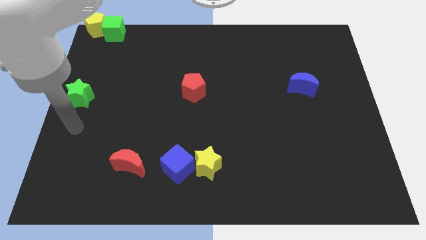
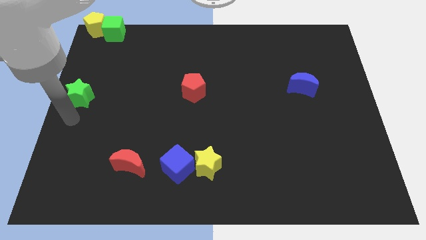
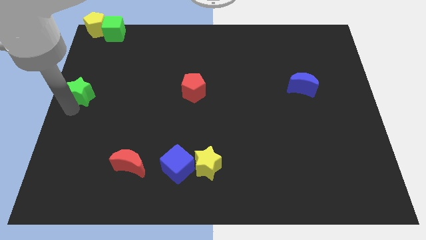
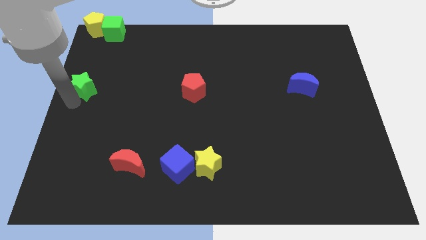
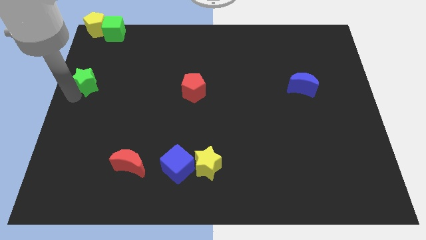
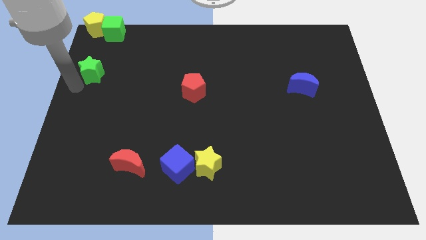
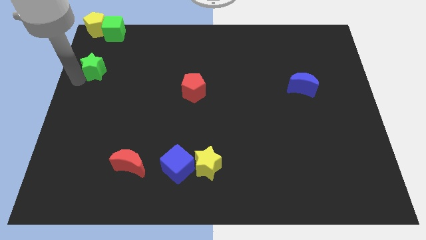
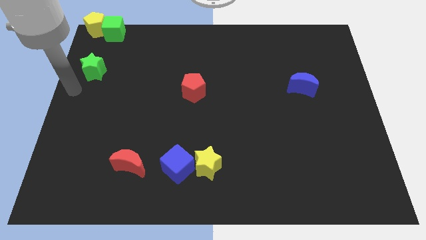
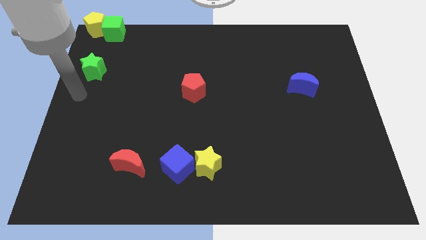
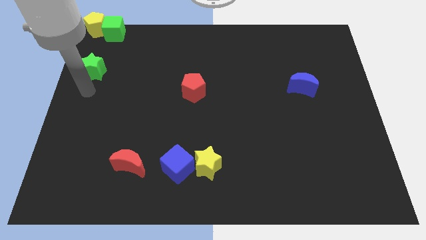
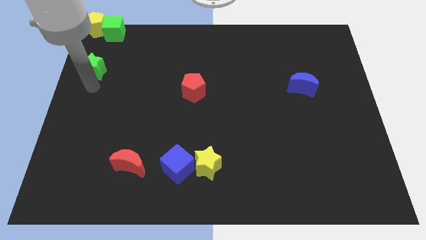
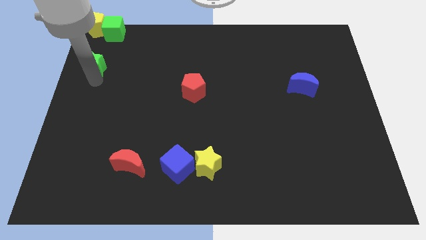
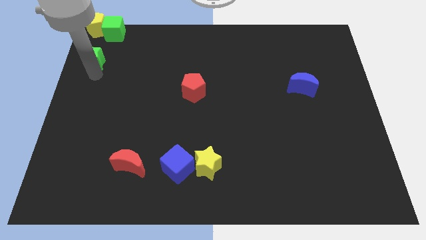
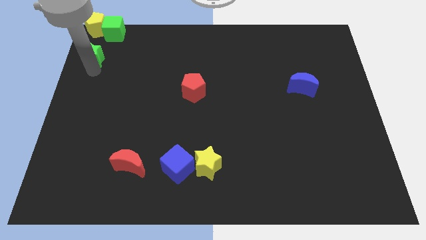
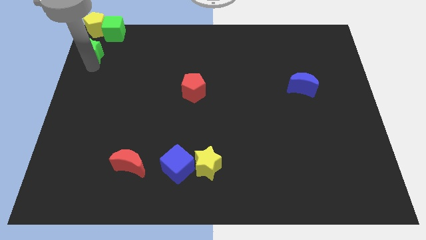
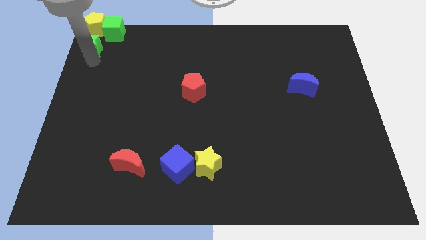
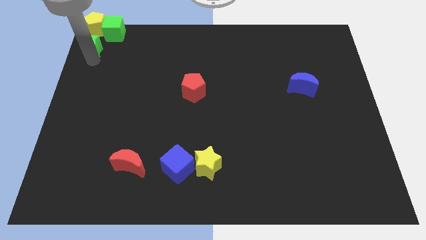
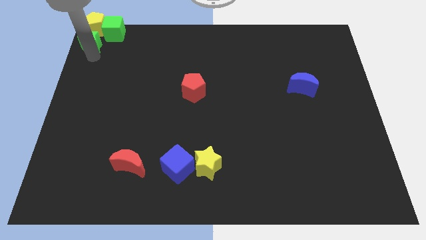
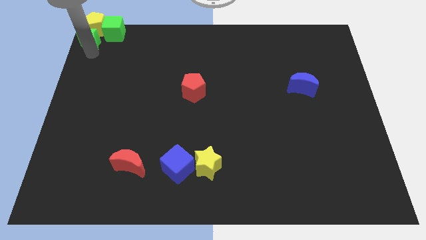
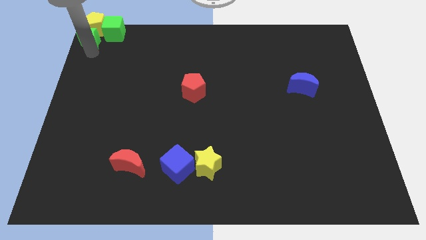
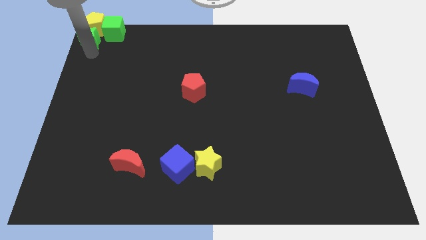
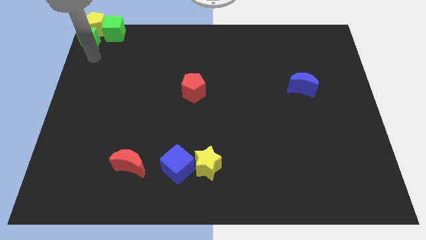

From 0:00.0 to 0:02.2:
place the green star below into the yellow pentagon

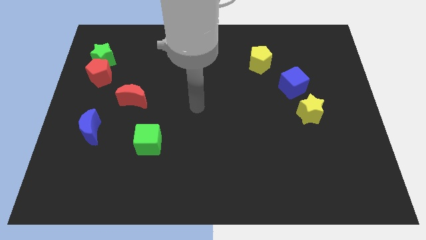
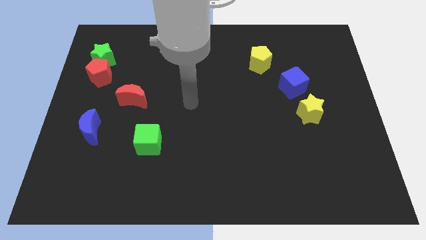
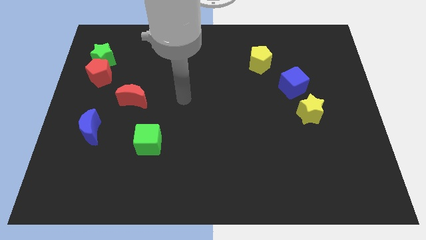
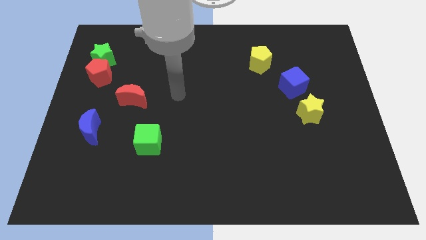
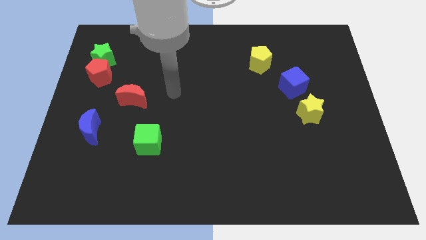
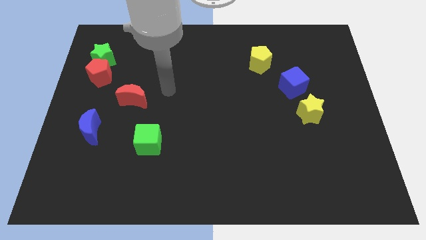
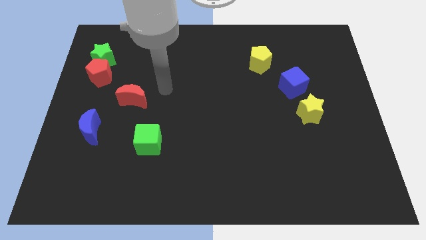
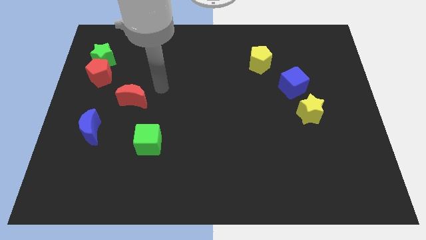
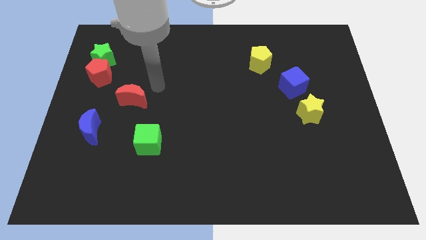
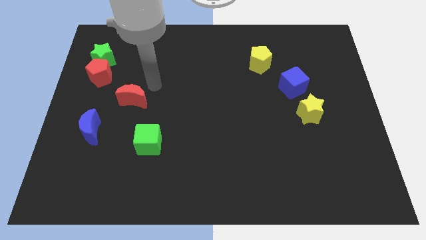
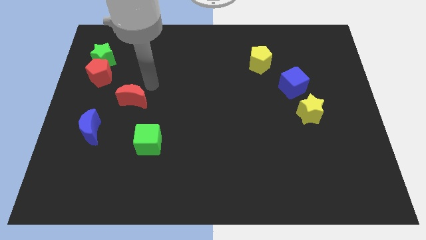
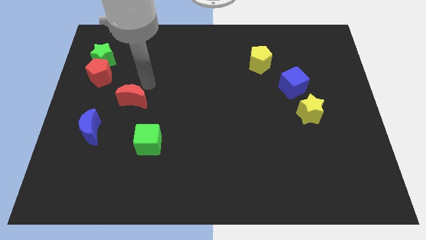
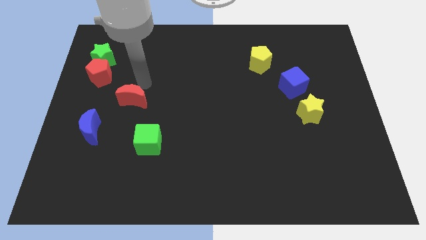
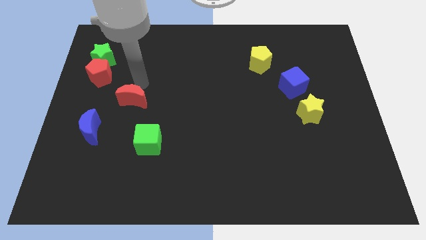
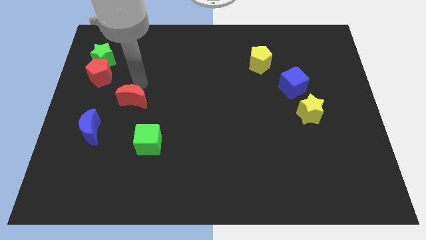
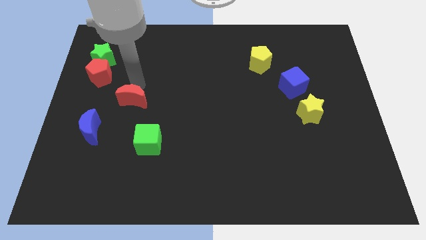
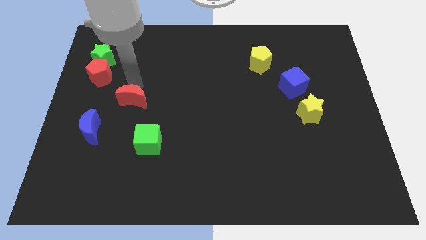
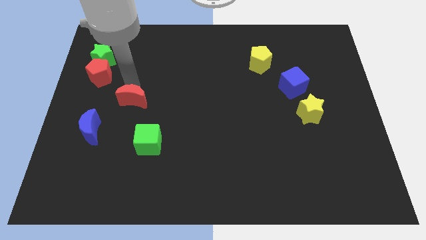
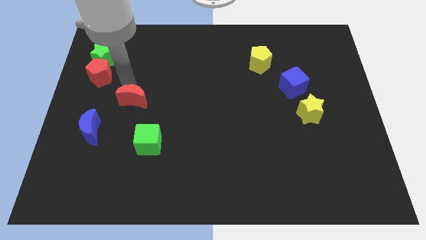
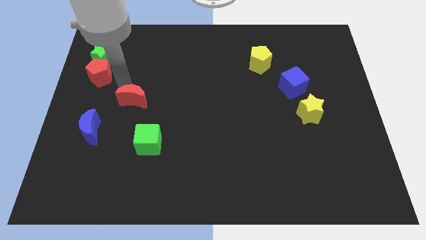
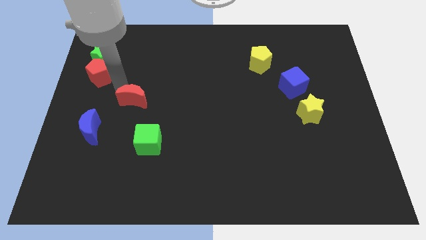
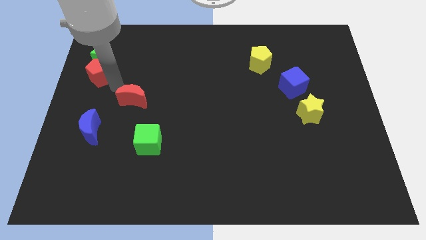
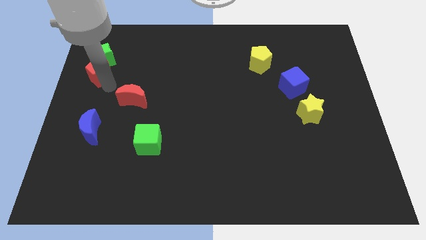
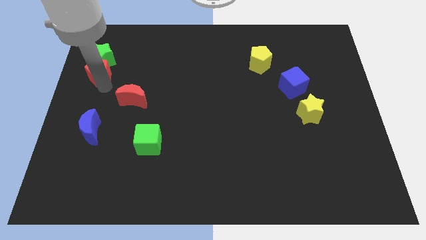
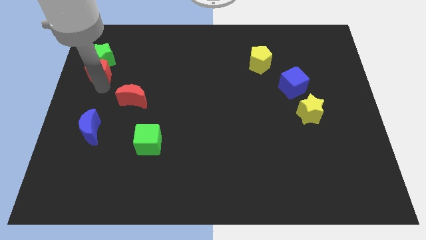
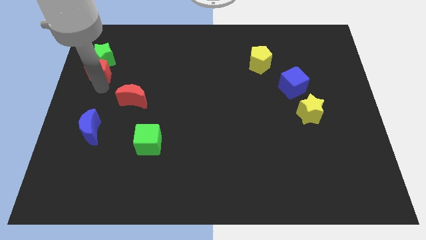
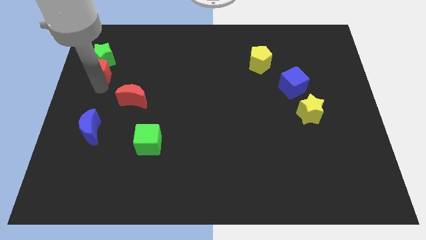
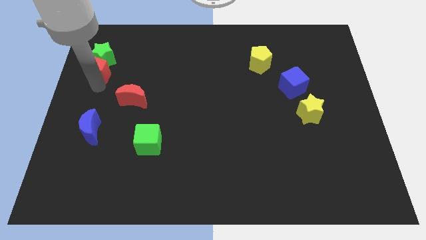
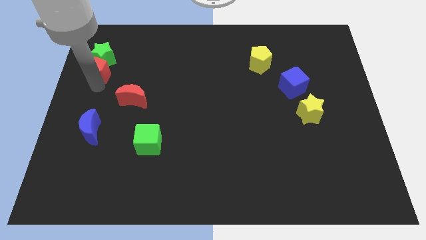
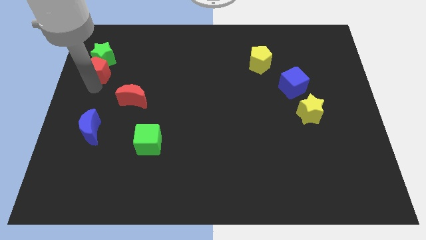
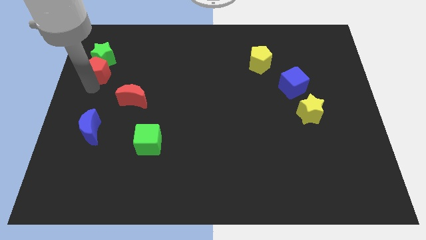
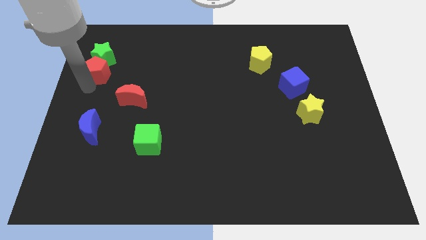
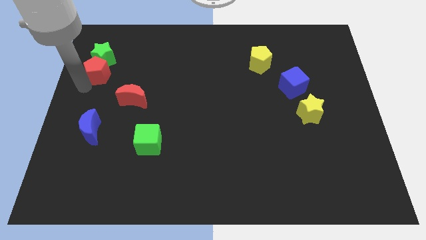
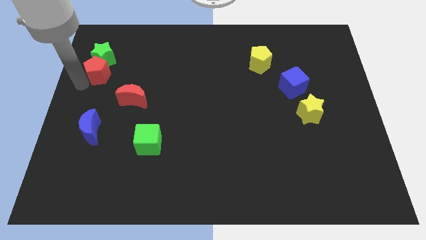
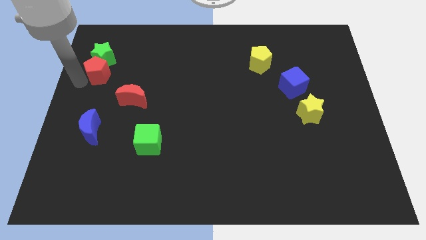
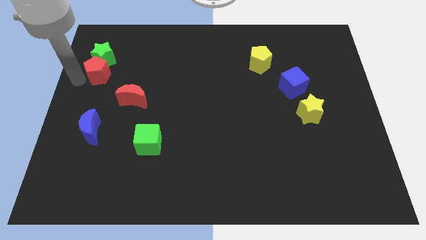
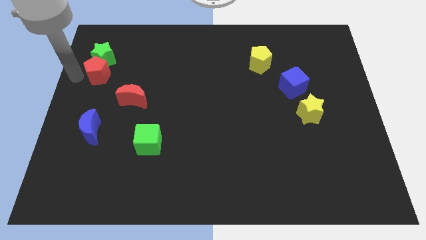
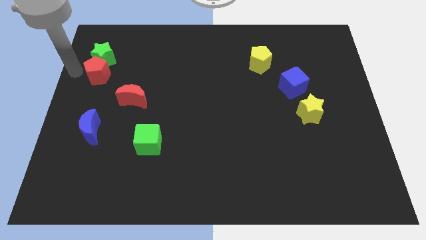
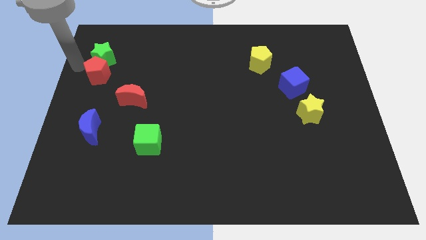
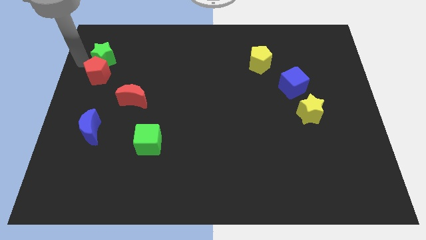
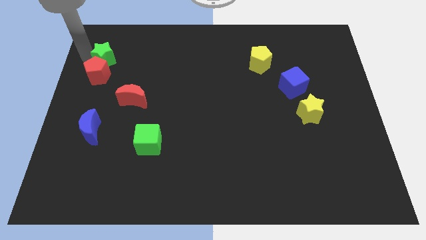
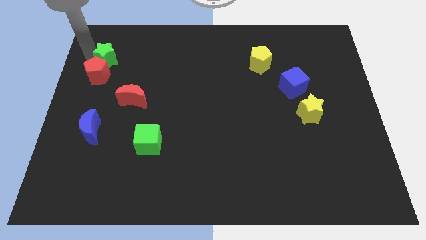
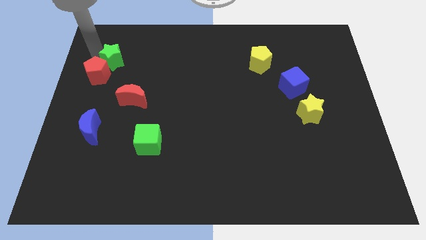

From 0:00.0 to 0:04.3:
place your arm towards the left side of the green star

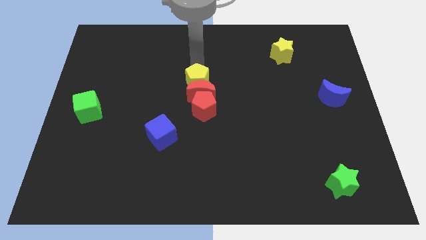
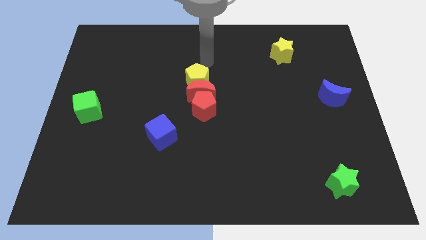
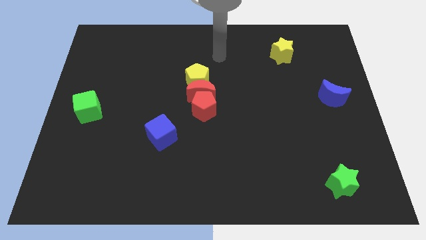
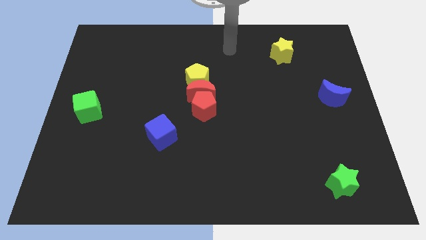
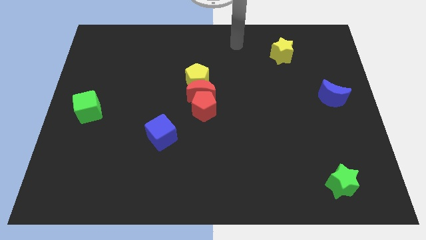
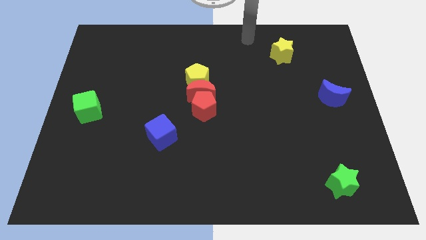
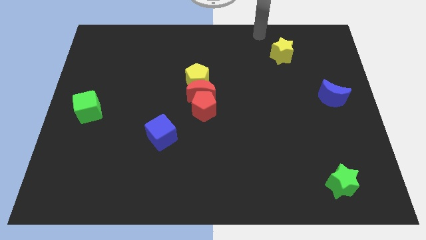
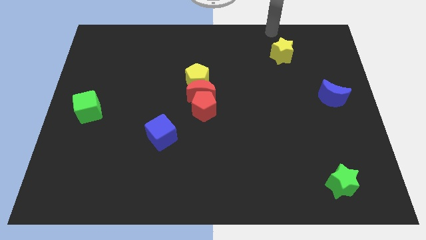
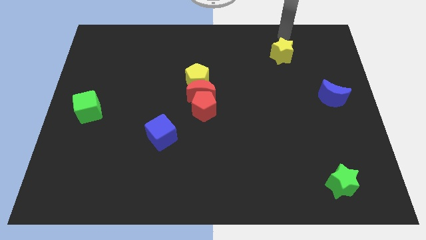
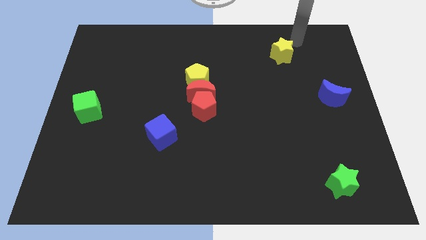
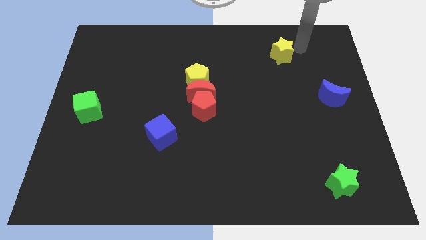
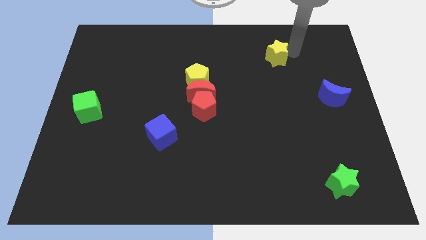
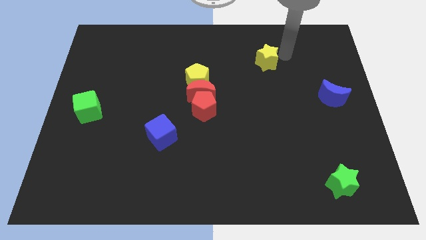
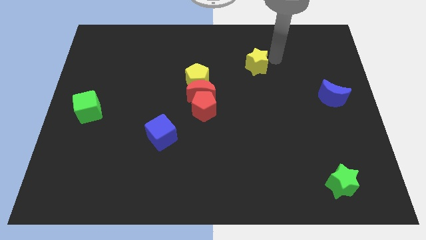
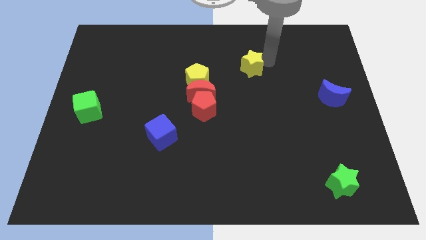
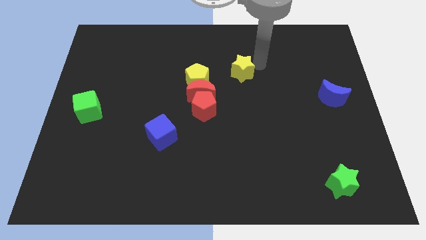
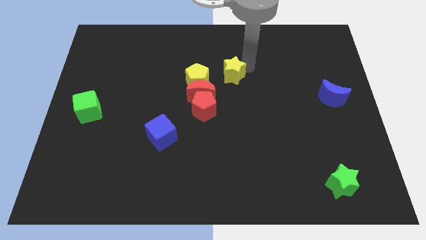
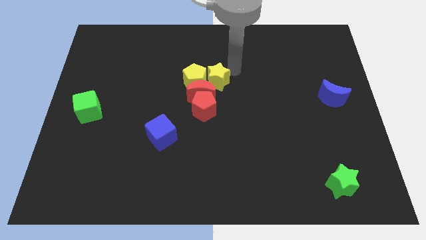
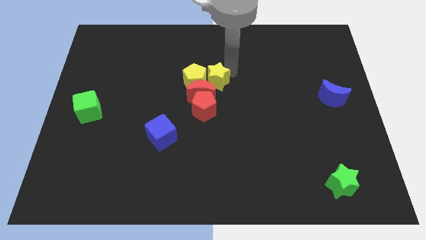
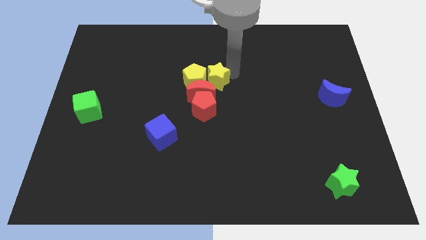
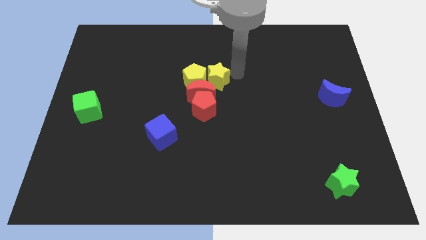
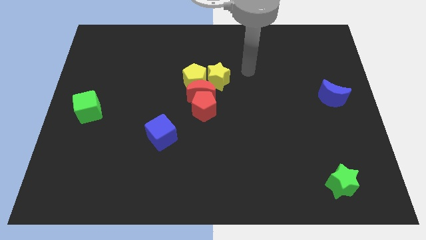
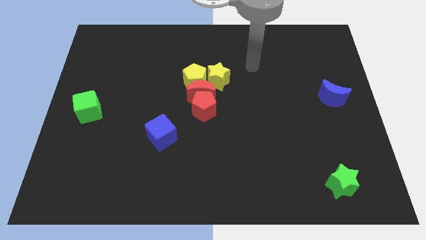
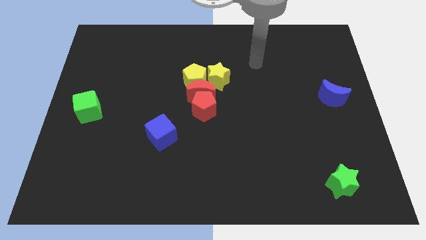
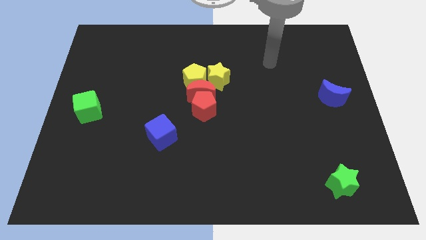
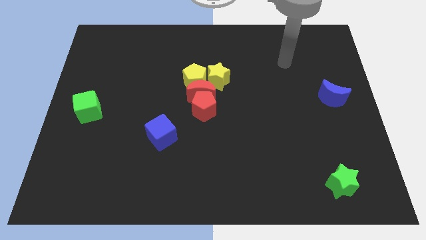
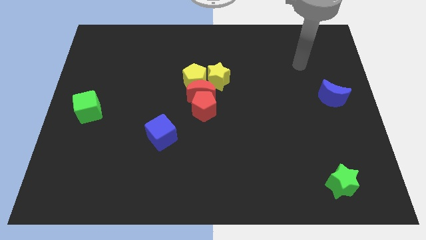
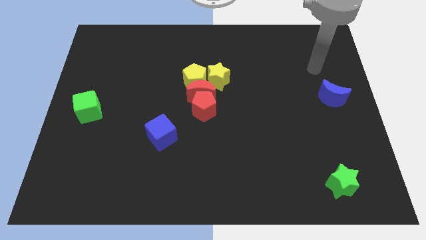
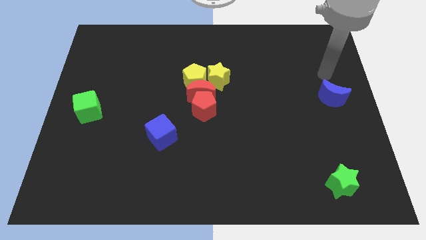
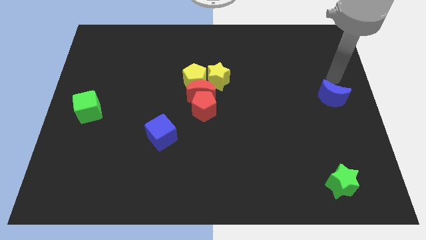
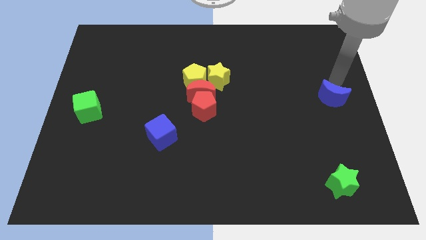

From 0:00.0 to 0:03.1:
slide the yellow star to the right side of the yellow pentagon
